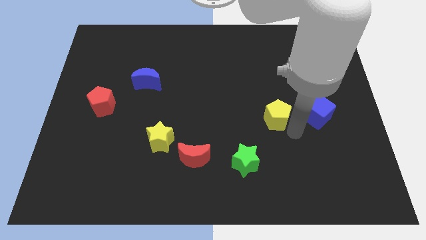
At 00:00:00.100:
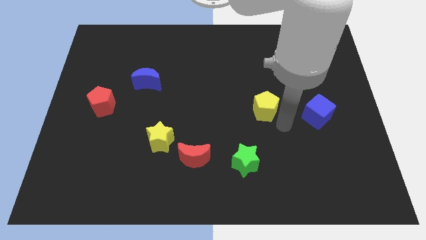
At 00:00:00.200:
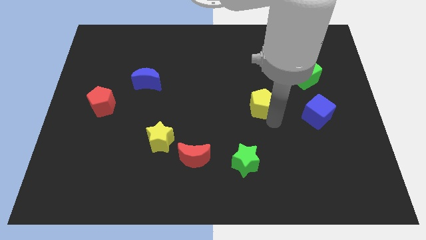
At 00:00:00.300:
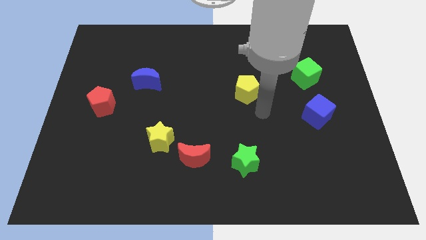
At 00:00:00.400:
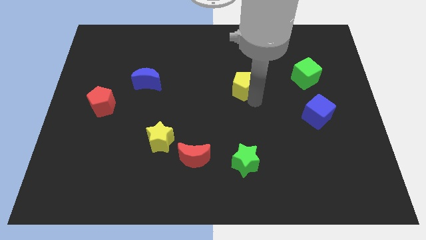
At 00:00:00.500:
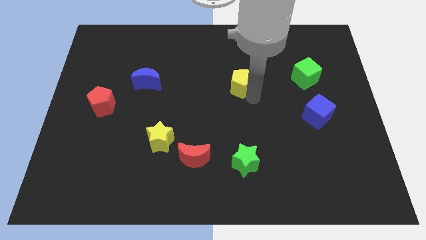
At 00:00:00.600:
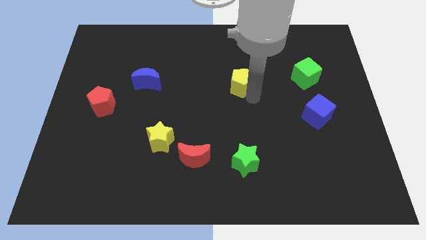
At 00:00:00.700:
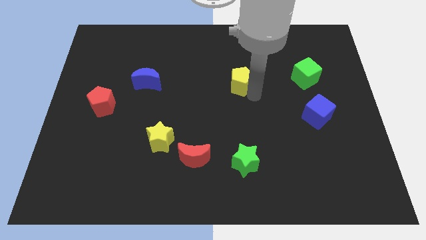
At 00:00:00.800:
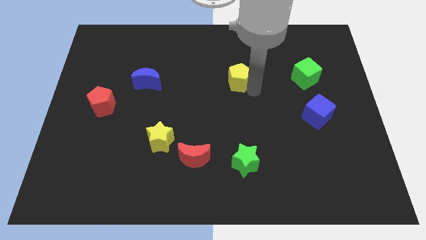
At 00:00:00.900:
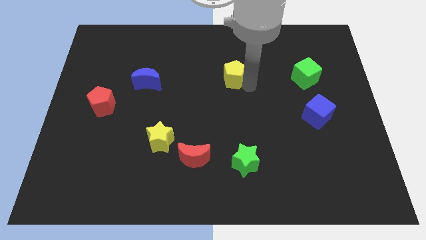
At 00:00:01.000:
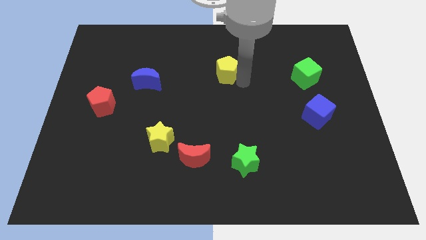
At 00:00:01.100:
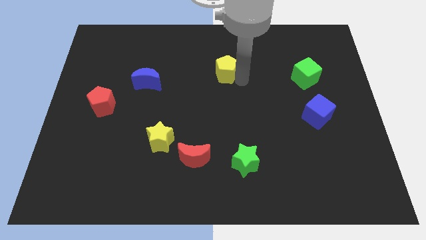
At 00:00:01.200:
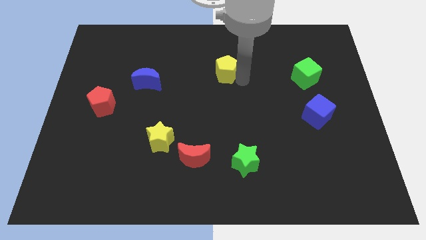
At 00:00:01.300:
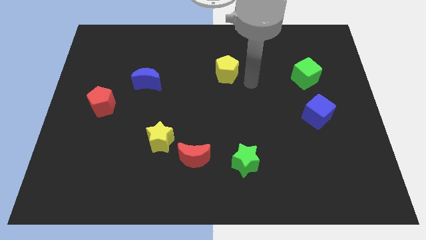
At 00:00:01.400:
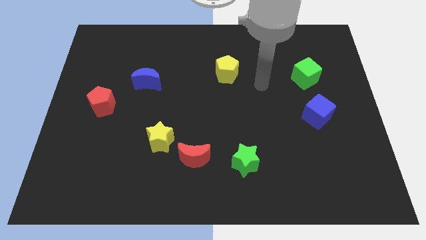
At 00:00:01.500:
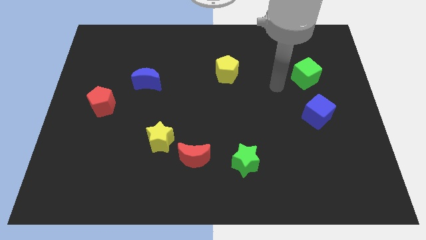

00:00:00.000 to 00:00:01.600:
push the yellow pentagon diagonal to the yellow star

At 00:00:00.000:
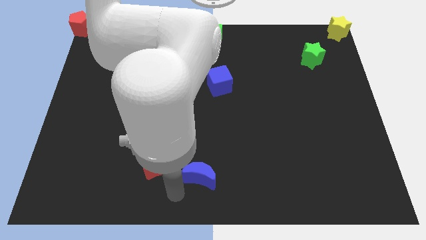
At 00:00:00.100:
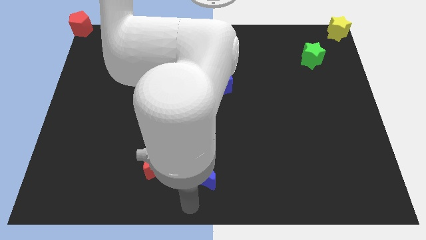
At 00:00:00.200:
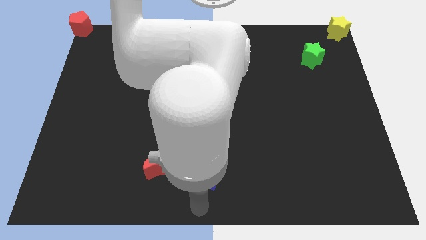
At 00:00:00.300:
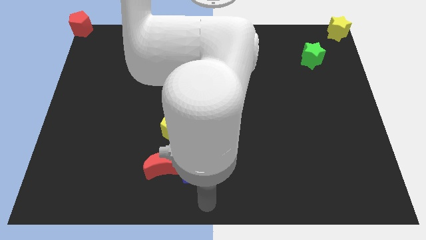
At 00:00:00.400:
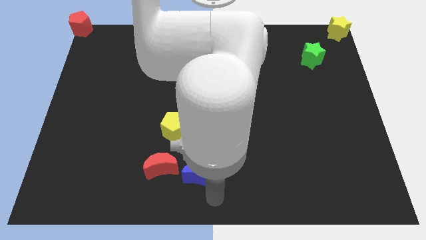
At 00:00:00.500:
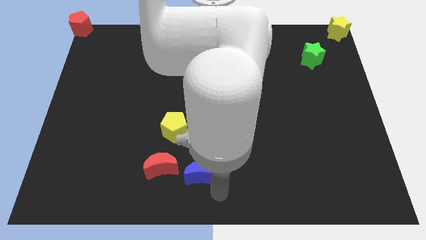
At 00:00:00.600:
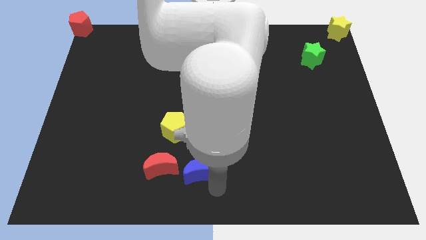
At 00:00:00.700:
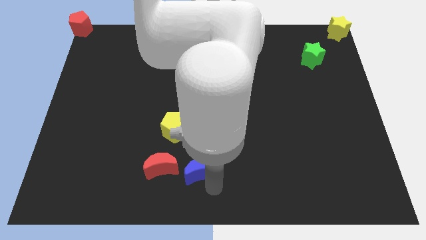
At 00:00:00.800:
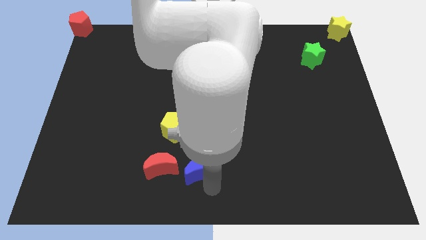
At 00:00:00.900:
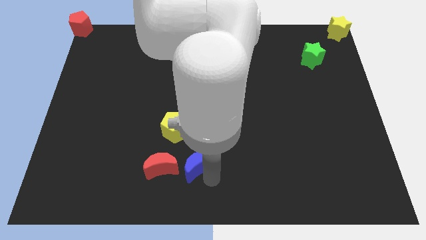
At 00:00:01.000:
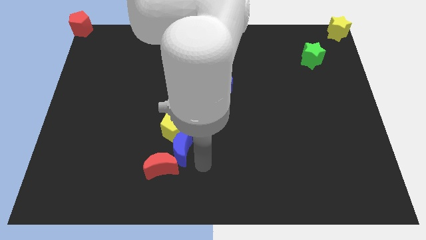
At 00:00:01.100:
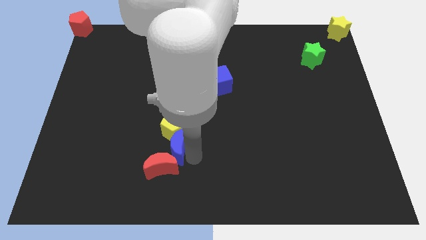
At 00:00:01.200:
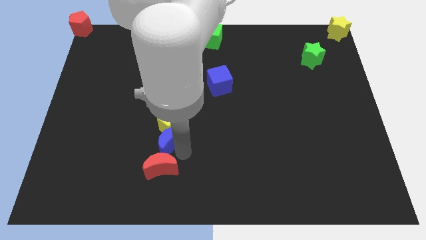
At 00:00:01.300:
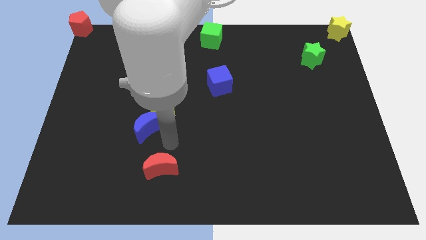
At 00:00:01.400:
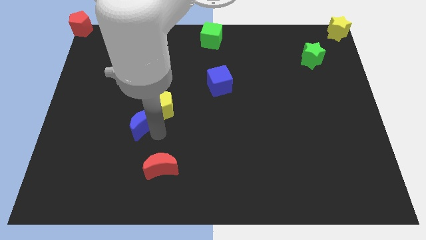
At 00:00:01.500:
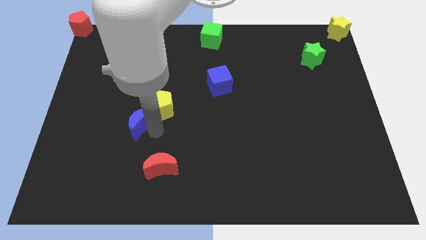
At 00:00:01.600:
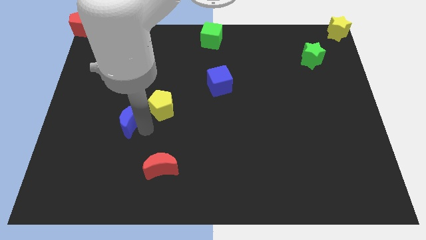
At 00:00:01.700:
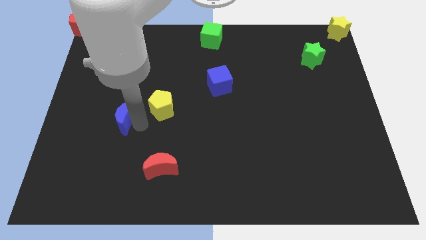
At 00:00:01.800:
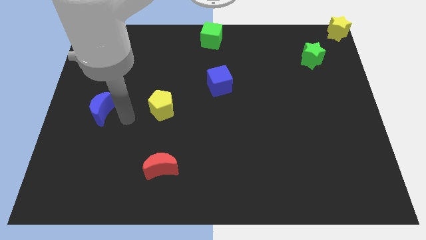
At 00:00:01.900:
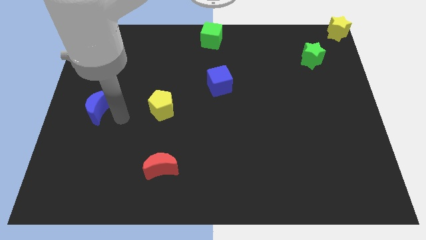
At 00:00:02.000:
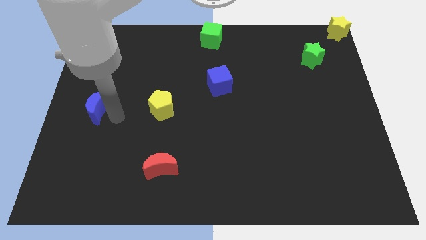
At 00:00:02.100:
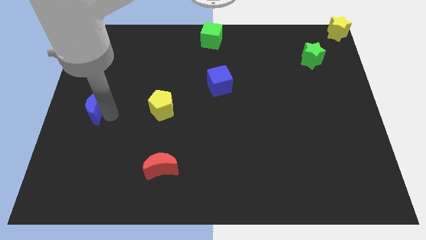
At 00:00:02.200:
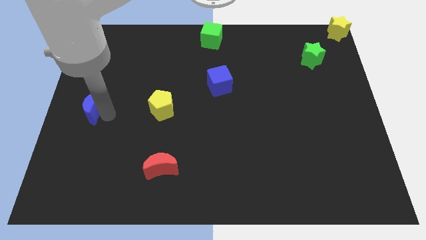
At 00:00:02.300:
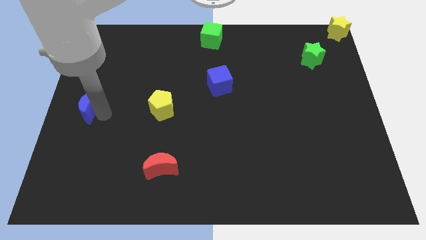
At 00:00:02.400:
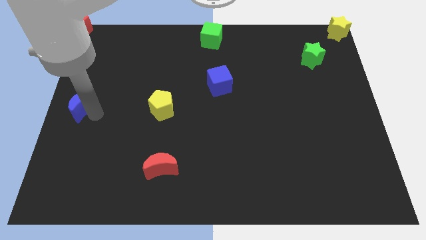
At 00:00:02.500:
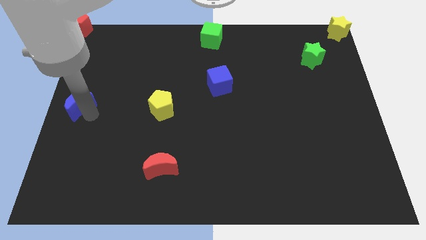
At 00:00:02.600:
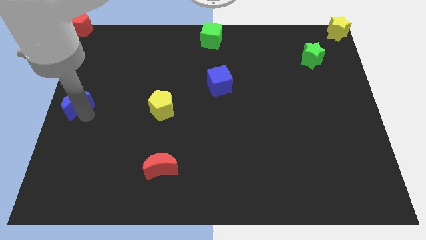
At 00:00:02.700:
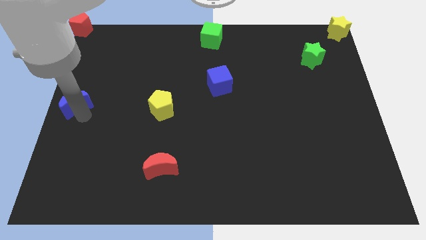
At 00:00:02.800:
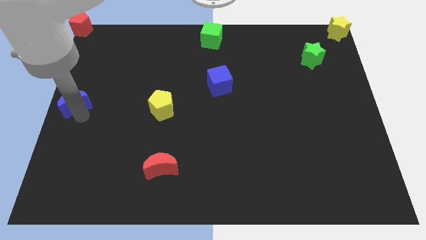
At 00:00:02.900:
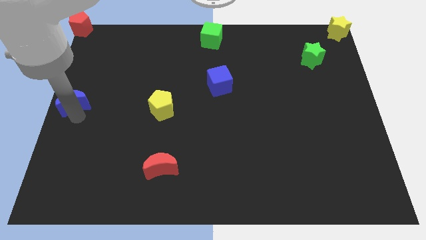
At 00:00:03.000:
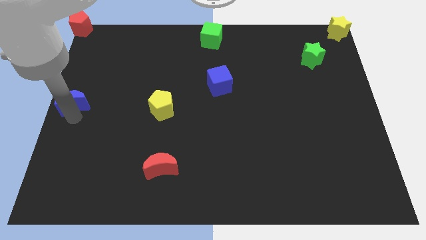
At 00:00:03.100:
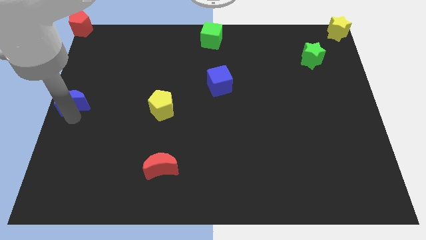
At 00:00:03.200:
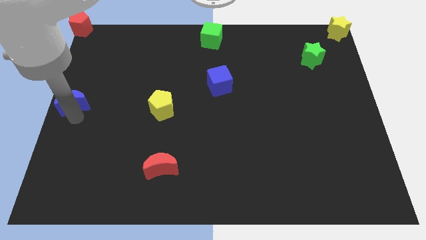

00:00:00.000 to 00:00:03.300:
push the blue moon to the center left of the board

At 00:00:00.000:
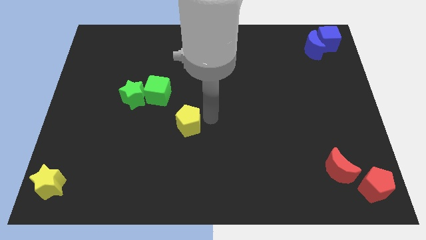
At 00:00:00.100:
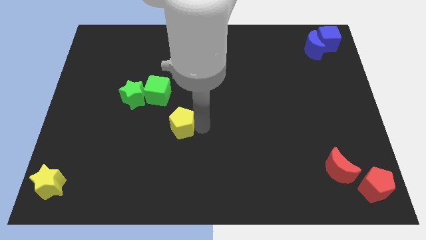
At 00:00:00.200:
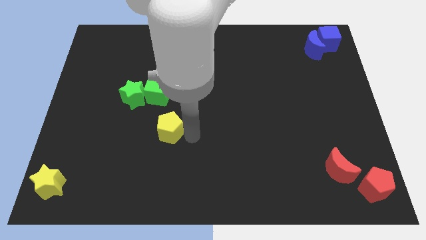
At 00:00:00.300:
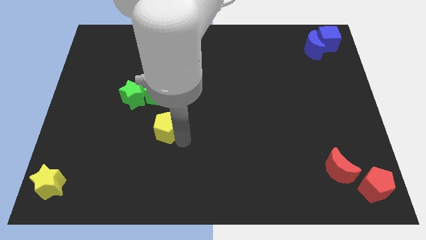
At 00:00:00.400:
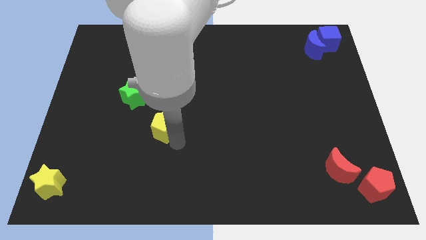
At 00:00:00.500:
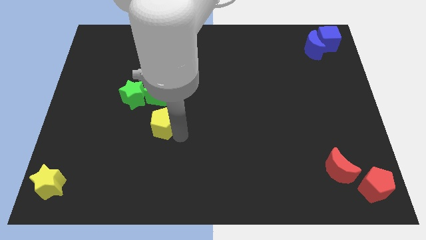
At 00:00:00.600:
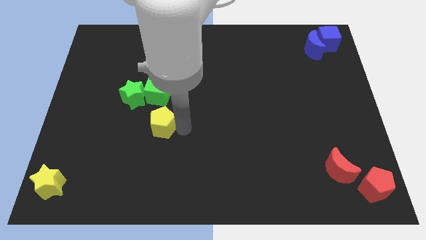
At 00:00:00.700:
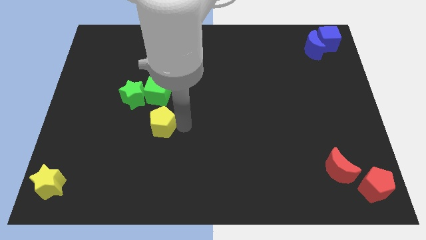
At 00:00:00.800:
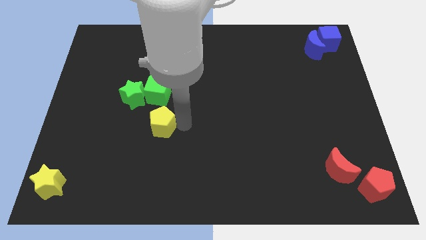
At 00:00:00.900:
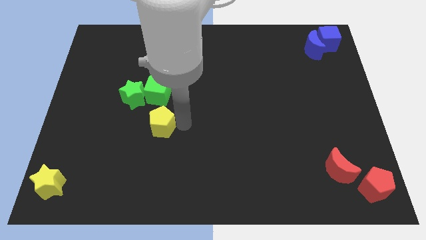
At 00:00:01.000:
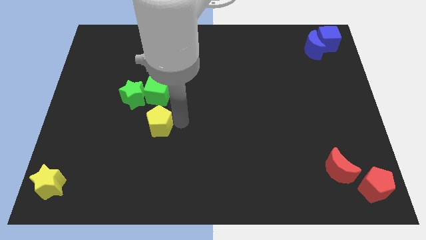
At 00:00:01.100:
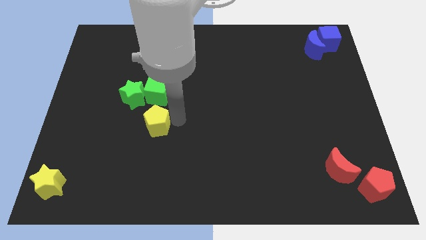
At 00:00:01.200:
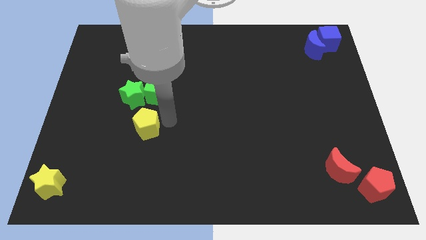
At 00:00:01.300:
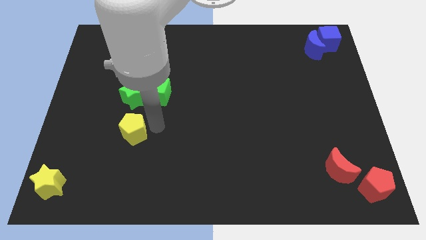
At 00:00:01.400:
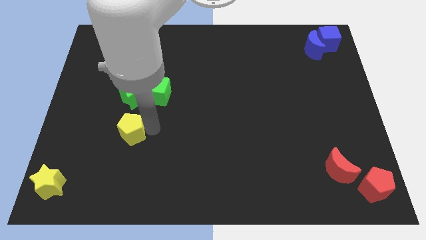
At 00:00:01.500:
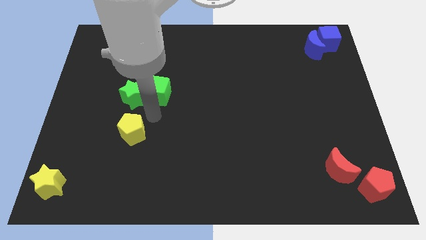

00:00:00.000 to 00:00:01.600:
push yellow star below green star

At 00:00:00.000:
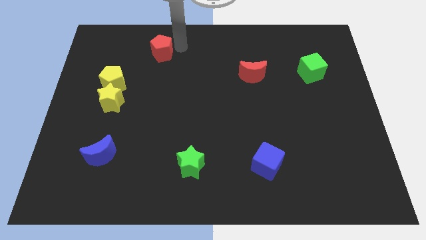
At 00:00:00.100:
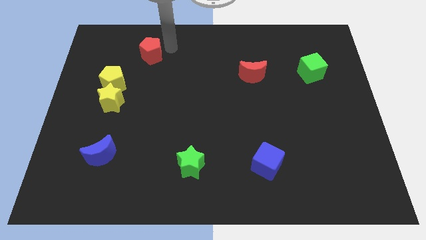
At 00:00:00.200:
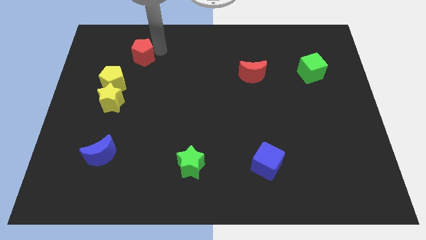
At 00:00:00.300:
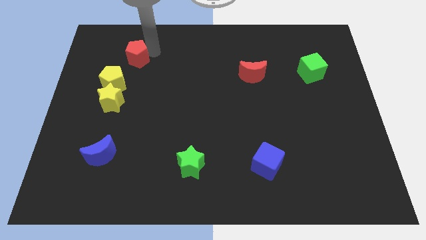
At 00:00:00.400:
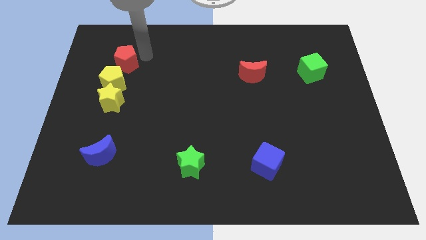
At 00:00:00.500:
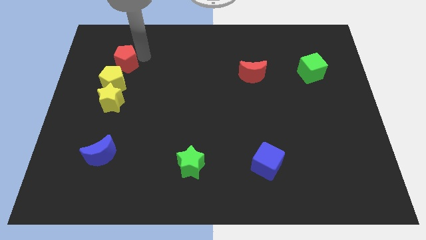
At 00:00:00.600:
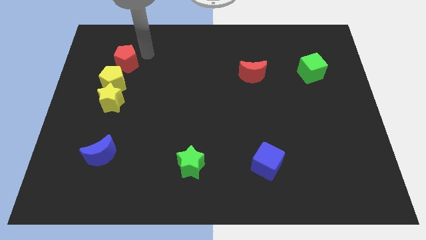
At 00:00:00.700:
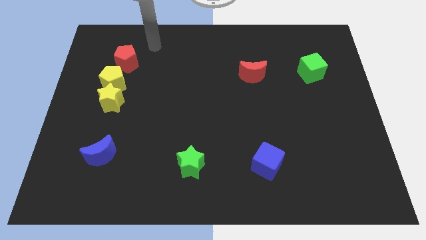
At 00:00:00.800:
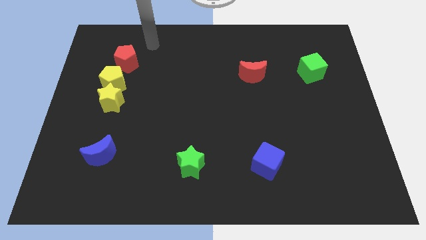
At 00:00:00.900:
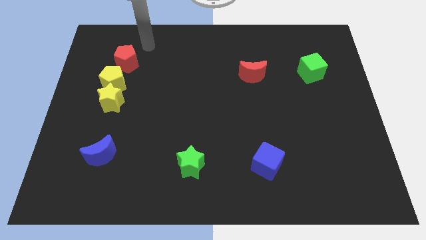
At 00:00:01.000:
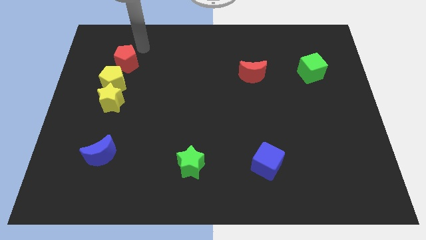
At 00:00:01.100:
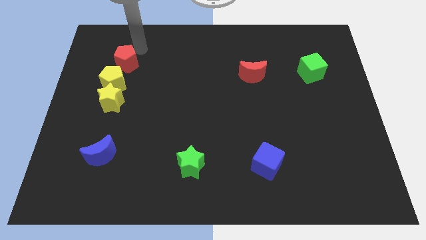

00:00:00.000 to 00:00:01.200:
place the red pentagon close to the yellow pentagon

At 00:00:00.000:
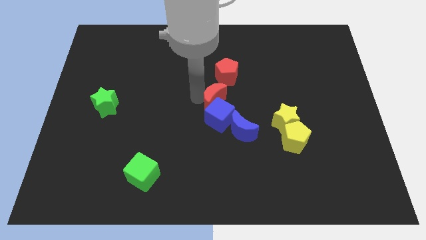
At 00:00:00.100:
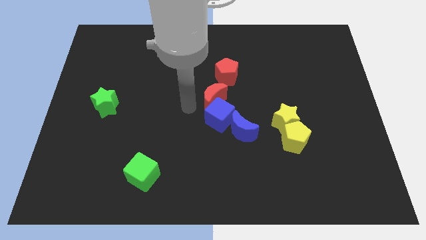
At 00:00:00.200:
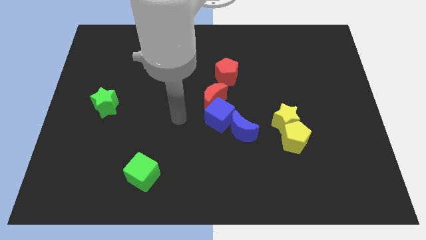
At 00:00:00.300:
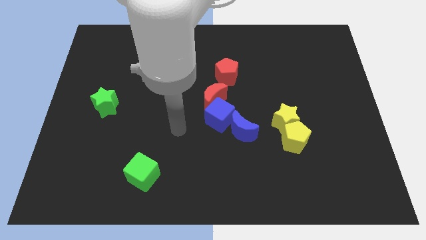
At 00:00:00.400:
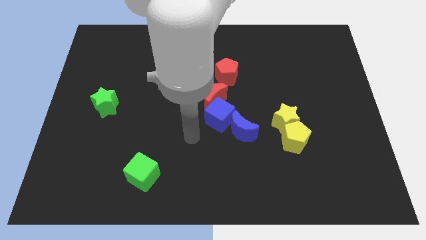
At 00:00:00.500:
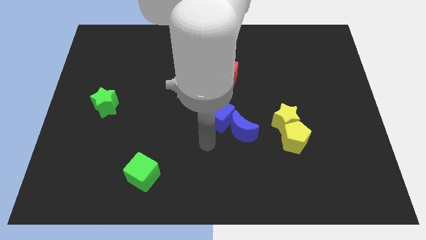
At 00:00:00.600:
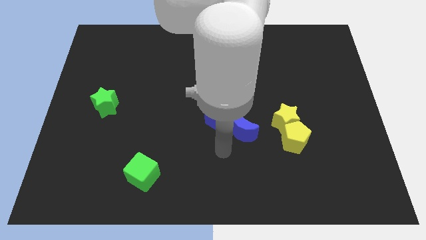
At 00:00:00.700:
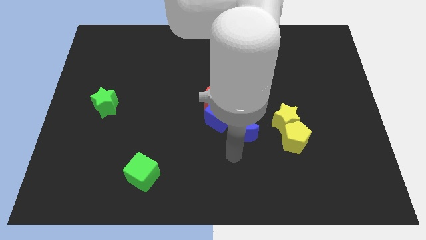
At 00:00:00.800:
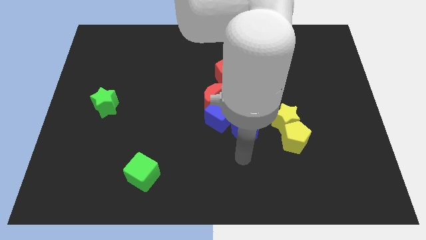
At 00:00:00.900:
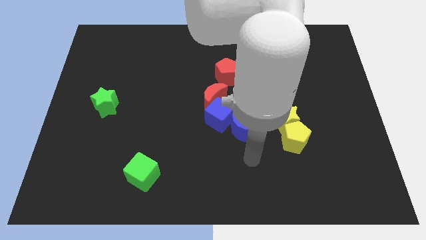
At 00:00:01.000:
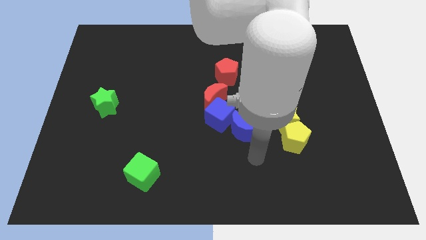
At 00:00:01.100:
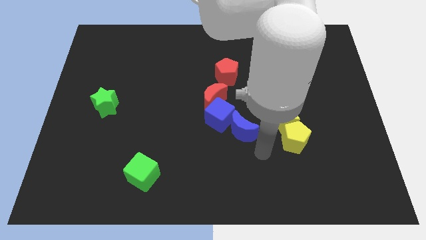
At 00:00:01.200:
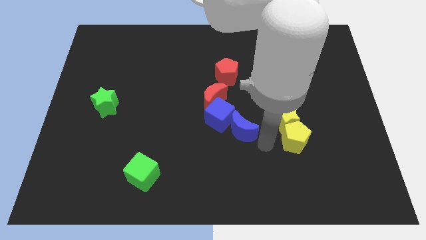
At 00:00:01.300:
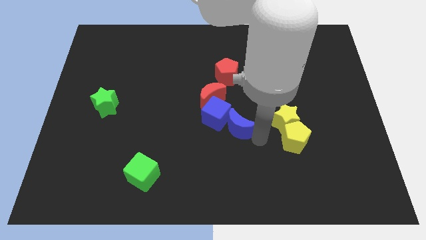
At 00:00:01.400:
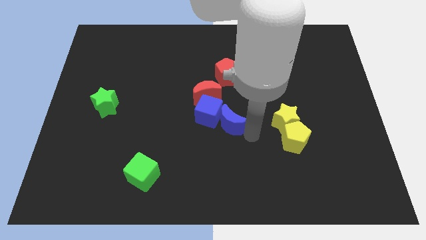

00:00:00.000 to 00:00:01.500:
push the blue crescent into the blue cube
